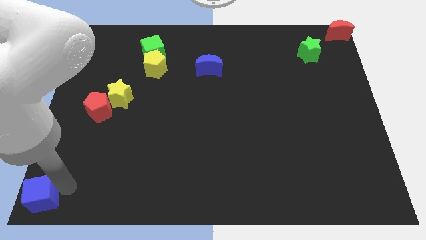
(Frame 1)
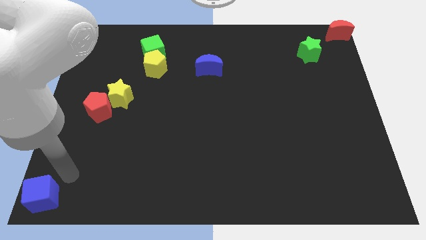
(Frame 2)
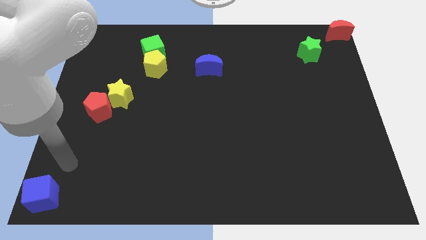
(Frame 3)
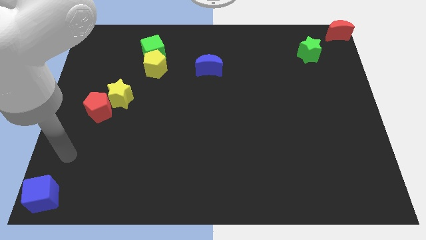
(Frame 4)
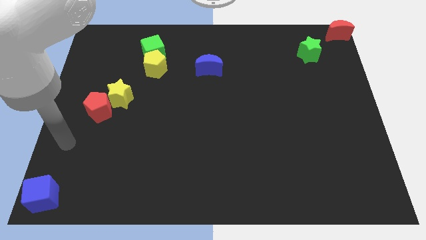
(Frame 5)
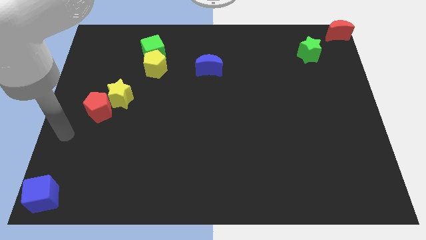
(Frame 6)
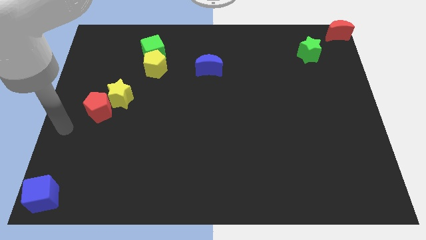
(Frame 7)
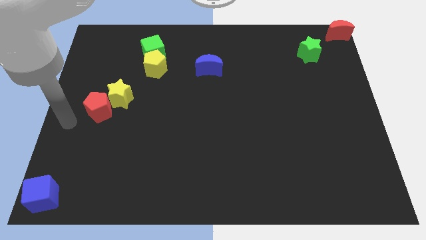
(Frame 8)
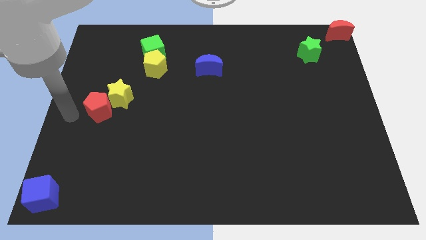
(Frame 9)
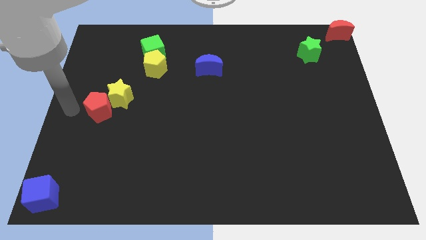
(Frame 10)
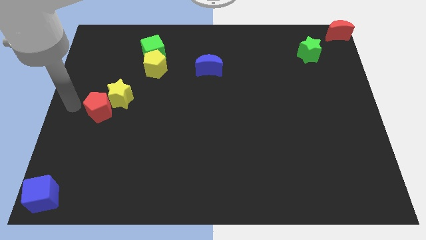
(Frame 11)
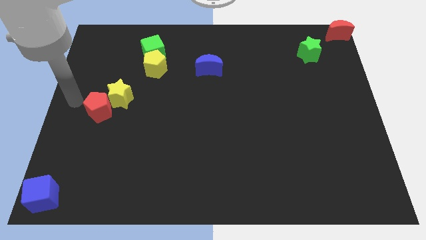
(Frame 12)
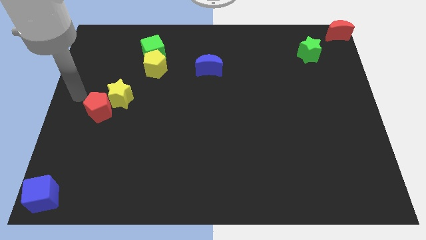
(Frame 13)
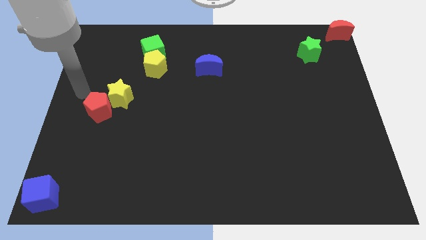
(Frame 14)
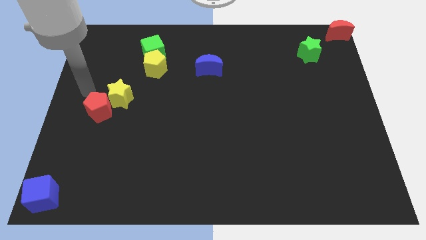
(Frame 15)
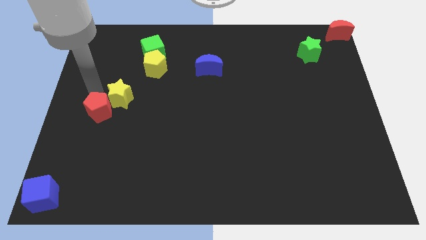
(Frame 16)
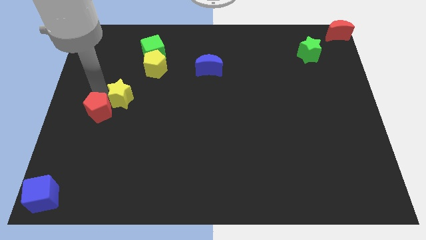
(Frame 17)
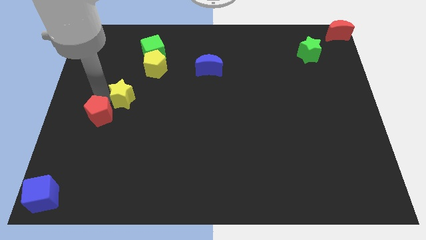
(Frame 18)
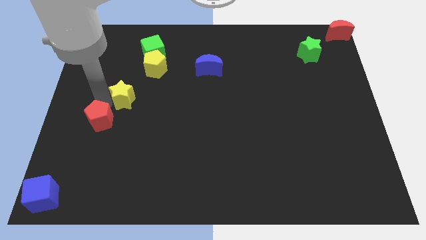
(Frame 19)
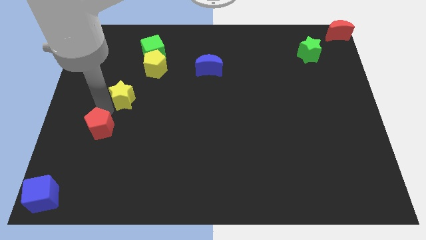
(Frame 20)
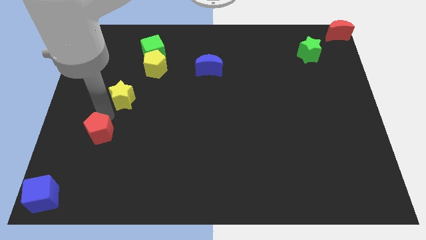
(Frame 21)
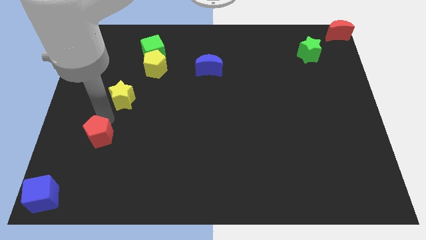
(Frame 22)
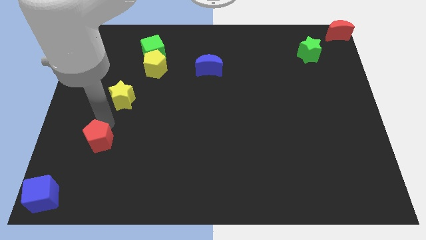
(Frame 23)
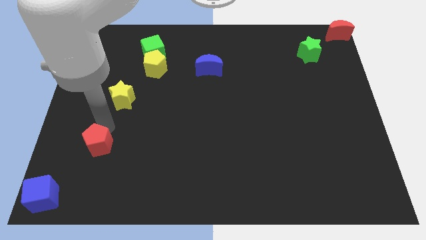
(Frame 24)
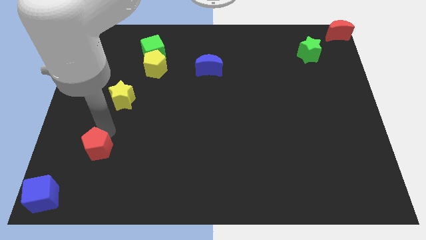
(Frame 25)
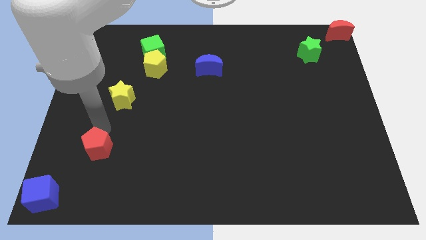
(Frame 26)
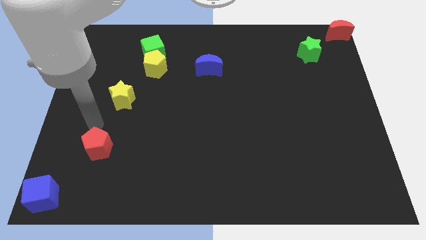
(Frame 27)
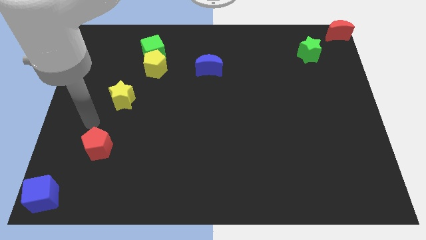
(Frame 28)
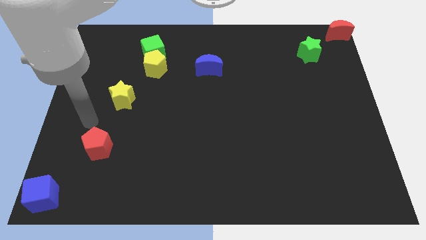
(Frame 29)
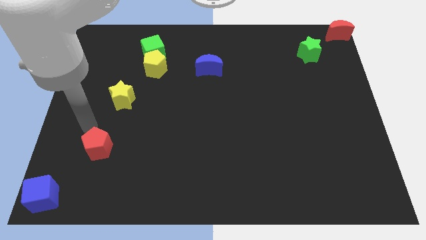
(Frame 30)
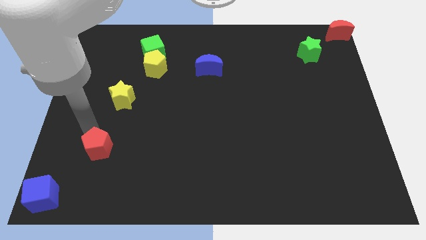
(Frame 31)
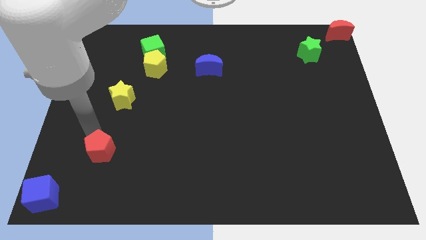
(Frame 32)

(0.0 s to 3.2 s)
separate the red pentagon from yellow star

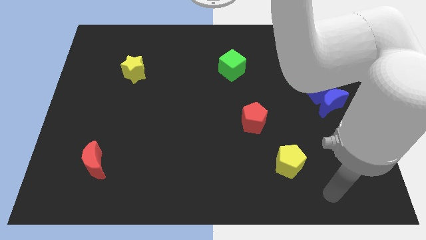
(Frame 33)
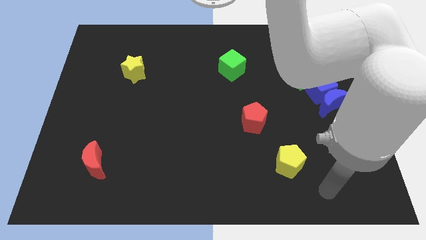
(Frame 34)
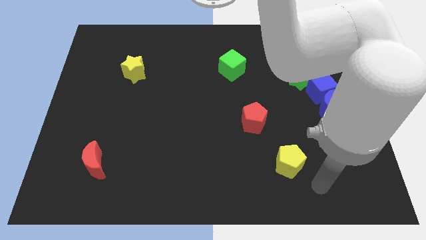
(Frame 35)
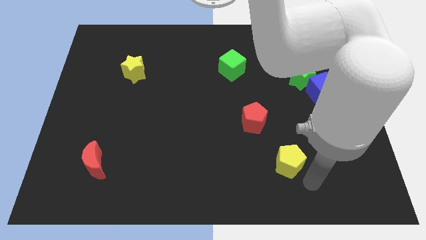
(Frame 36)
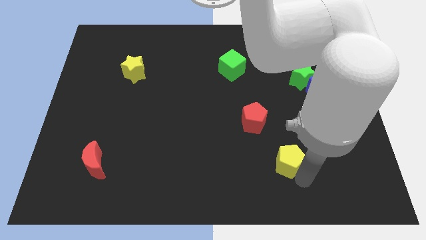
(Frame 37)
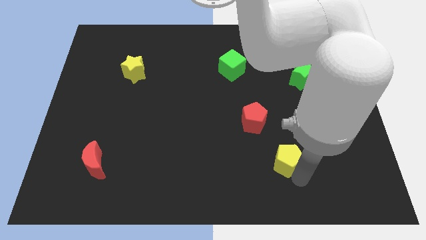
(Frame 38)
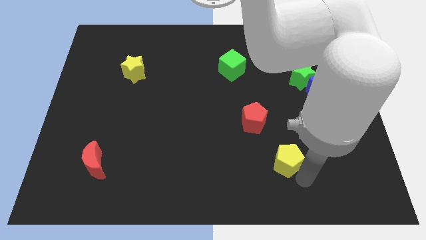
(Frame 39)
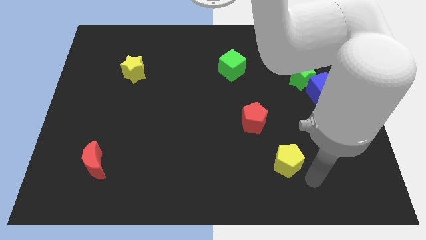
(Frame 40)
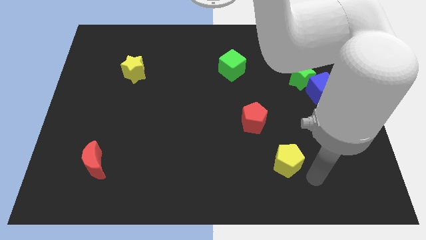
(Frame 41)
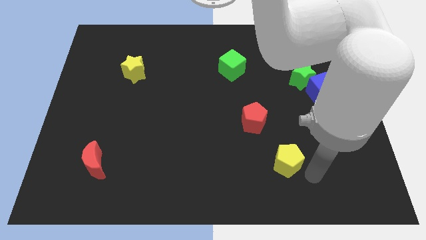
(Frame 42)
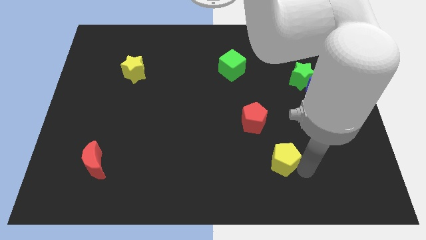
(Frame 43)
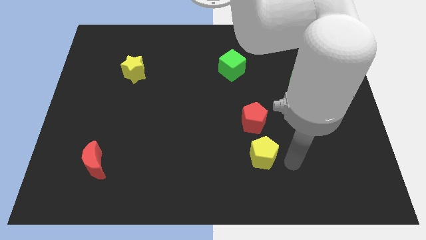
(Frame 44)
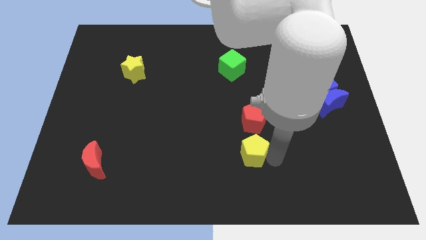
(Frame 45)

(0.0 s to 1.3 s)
drag the yellow pentagon to the bottom side of the red pentagon

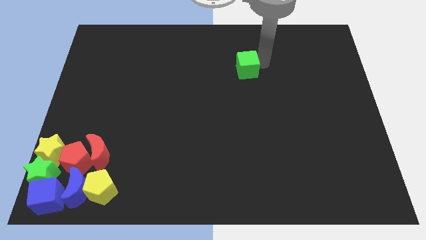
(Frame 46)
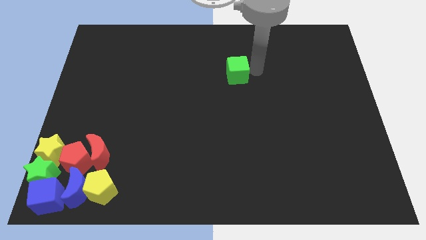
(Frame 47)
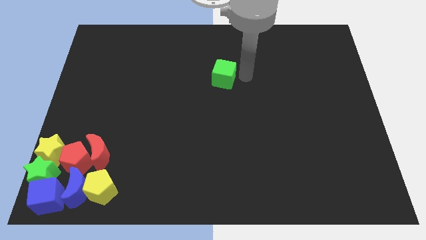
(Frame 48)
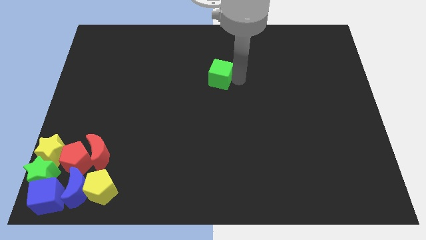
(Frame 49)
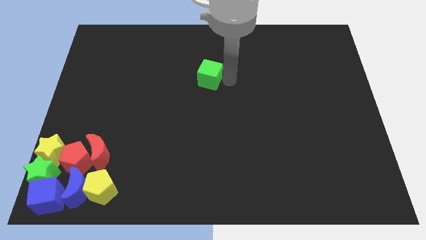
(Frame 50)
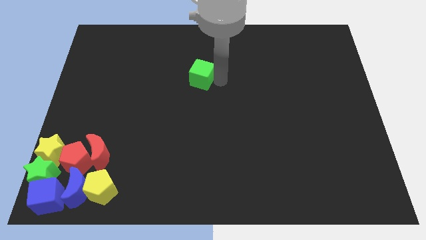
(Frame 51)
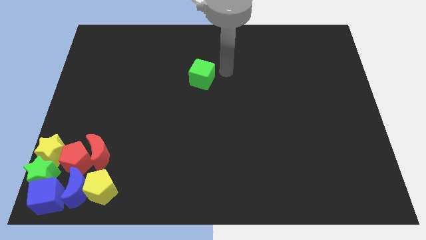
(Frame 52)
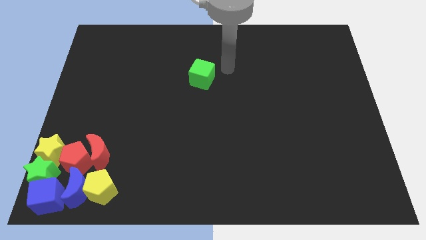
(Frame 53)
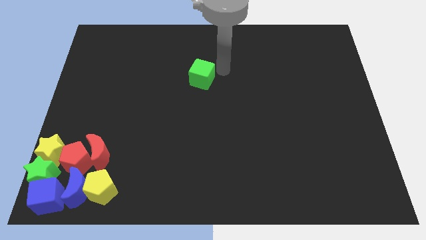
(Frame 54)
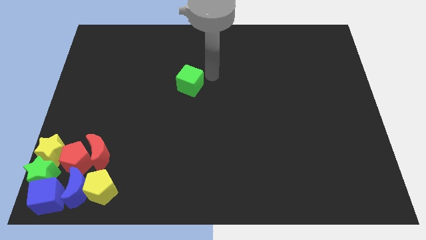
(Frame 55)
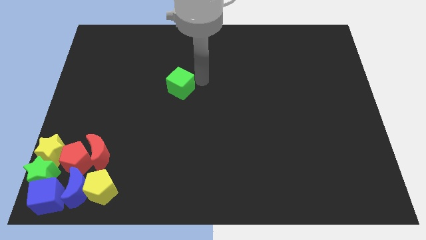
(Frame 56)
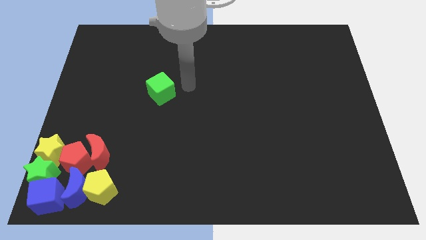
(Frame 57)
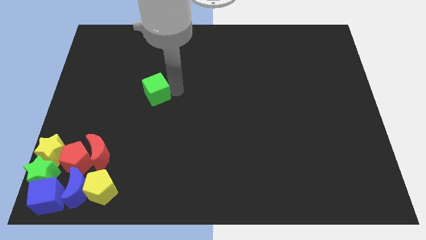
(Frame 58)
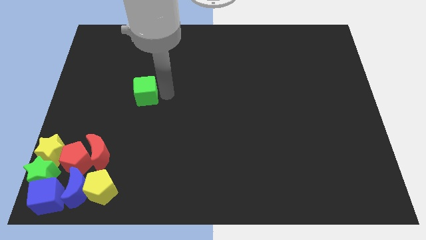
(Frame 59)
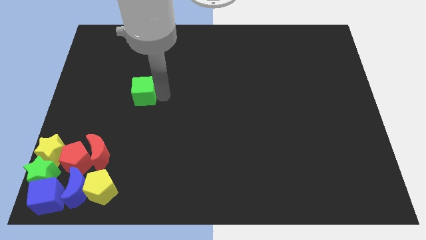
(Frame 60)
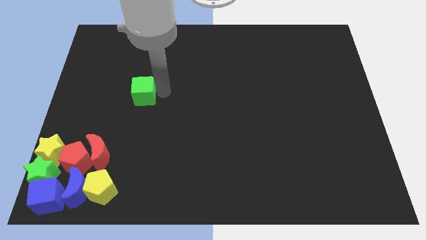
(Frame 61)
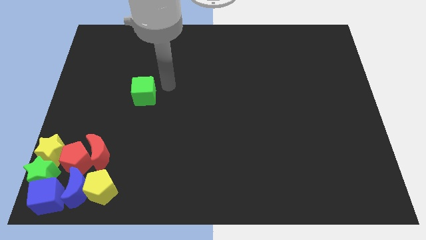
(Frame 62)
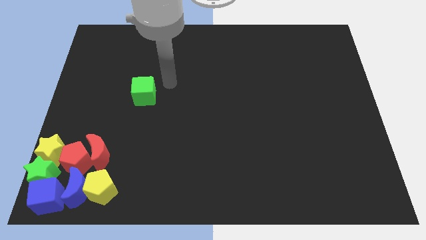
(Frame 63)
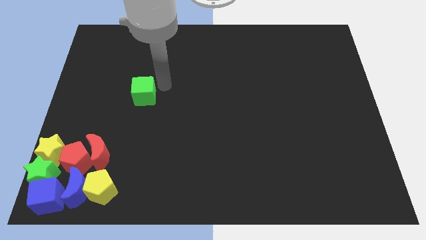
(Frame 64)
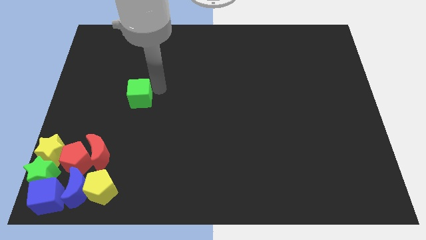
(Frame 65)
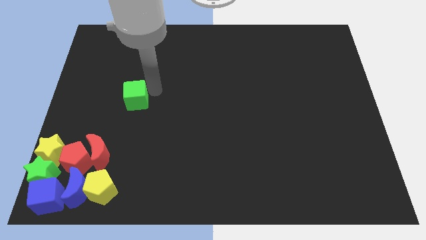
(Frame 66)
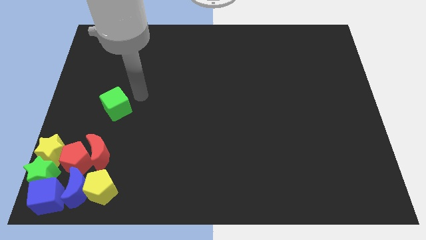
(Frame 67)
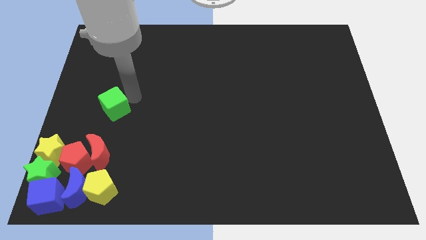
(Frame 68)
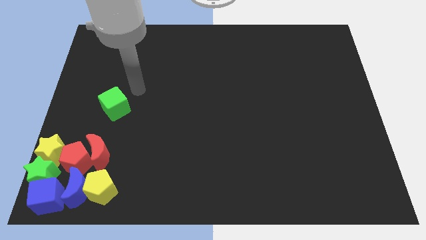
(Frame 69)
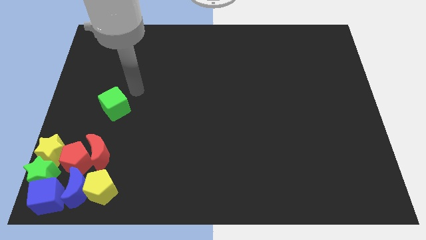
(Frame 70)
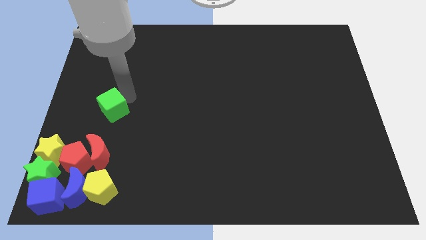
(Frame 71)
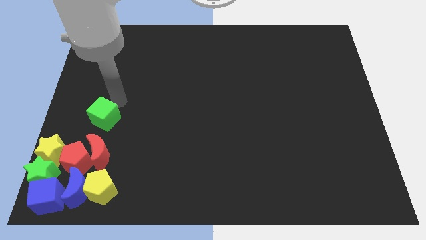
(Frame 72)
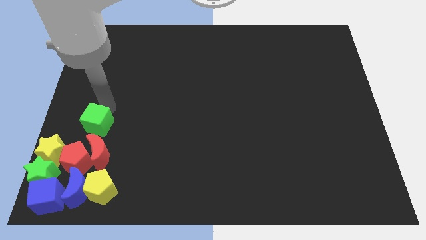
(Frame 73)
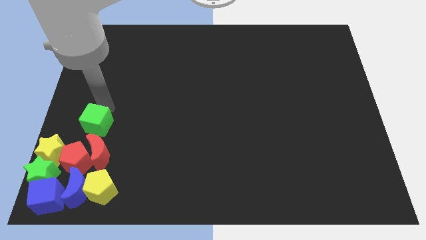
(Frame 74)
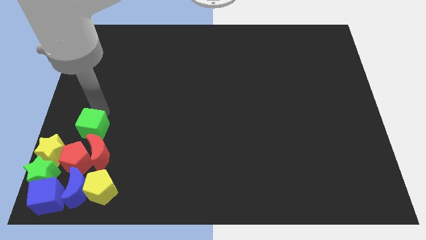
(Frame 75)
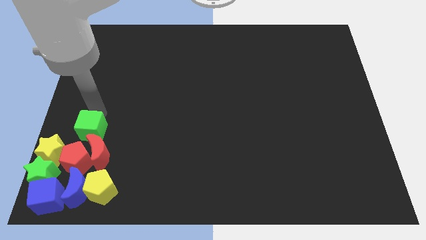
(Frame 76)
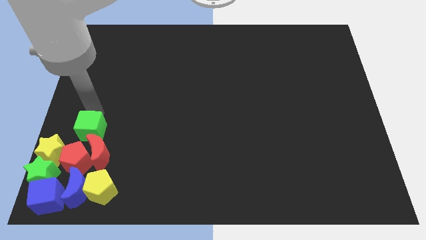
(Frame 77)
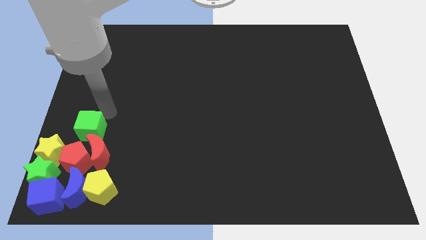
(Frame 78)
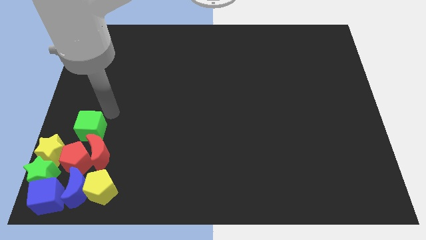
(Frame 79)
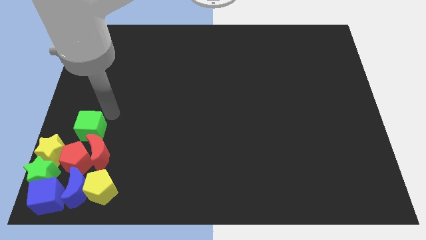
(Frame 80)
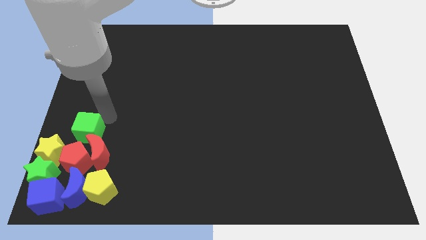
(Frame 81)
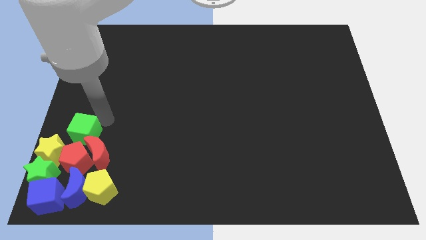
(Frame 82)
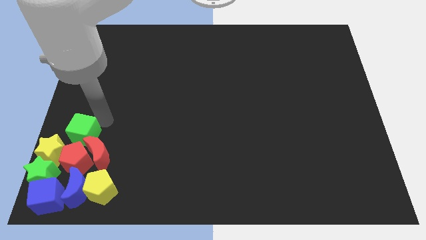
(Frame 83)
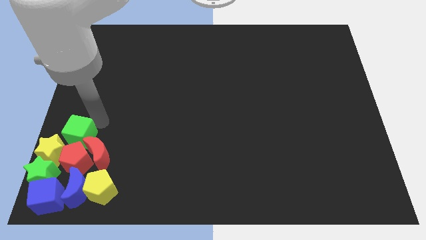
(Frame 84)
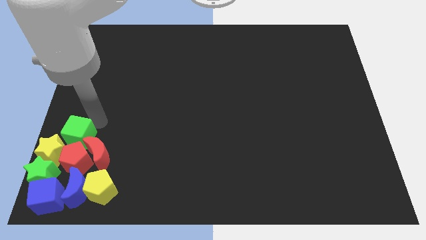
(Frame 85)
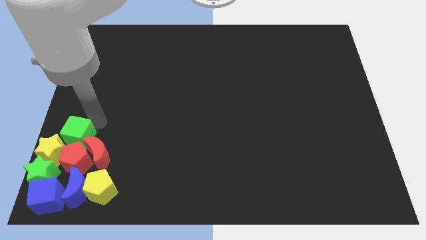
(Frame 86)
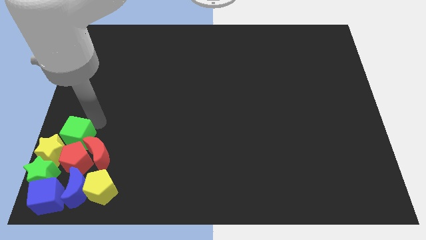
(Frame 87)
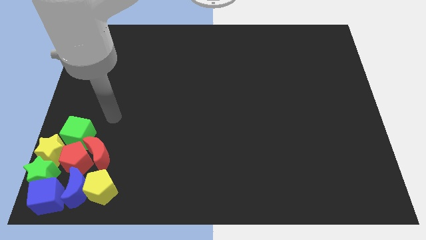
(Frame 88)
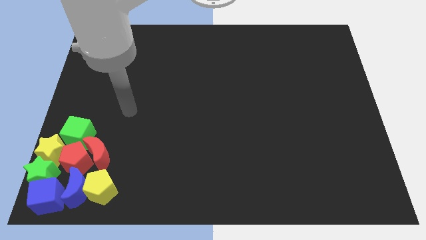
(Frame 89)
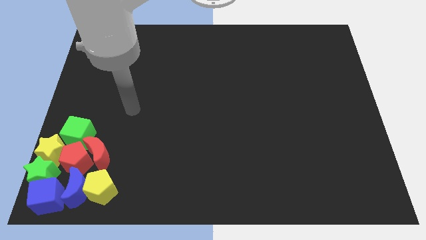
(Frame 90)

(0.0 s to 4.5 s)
push the green cube into the group of blocks

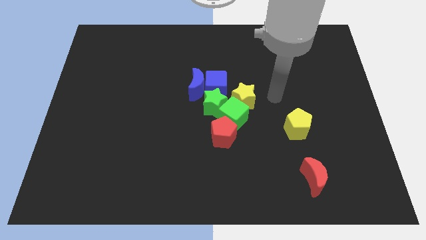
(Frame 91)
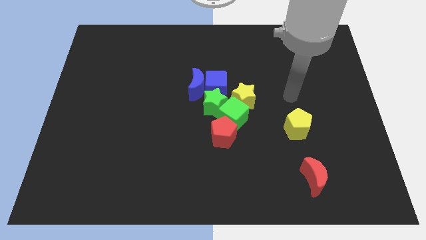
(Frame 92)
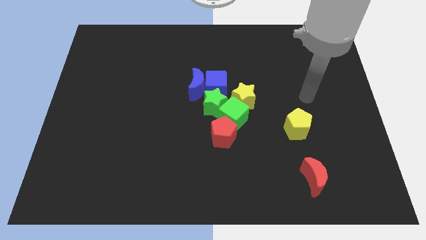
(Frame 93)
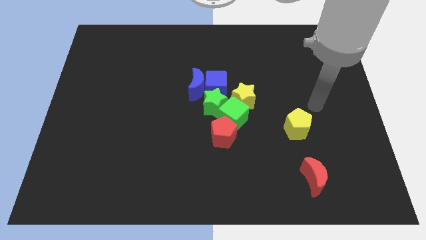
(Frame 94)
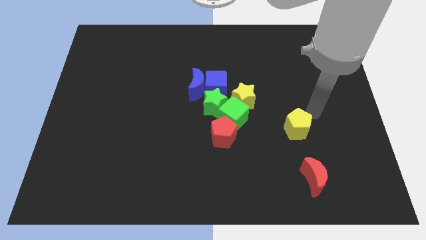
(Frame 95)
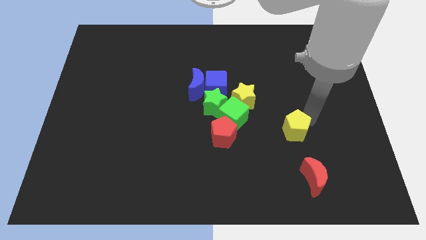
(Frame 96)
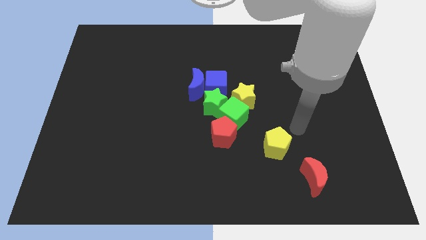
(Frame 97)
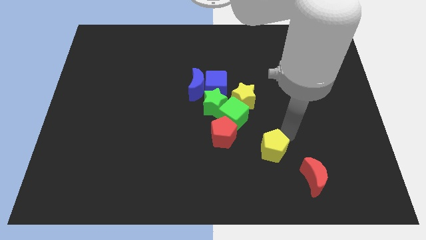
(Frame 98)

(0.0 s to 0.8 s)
push the yellow pentagon between the green cube and red moon diagonally
